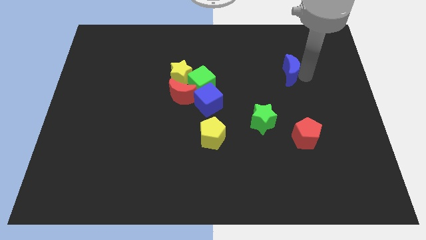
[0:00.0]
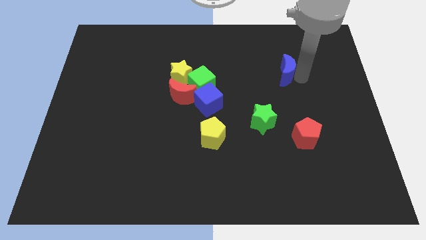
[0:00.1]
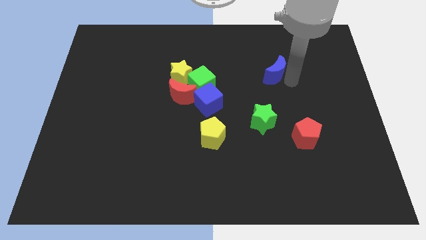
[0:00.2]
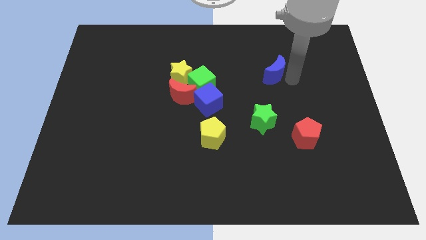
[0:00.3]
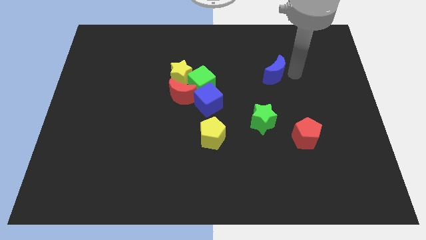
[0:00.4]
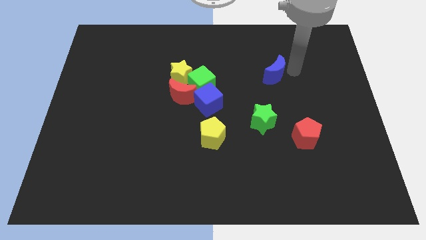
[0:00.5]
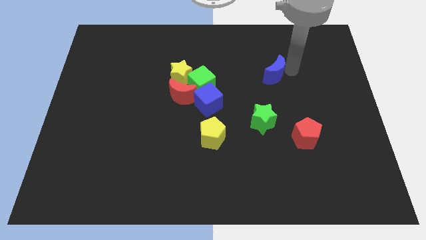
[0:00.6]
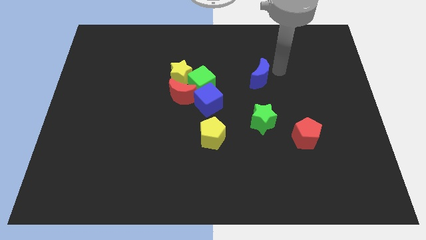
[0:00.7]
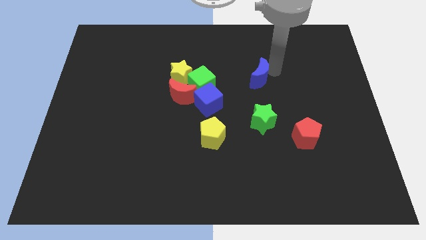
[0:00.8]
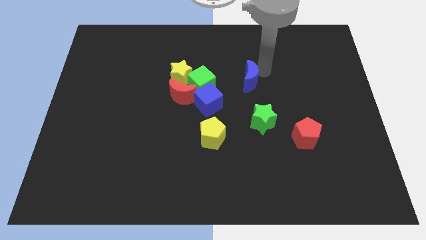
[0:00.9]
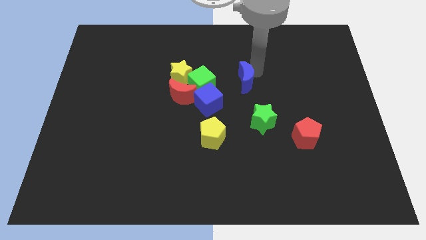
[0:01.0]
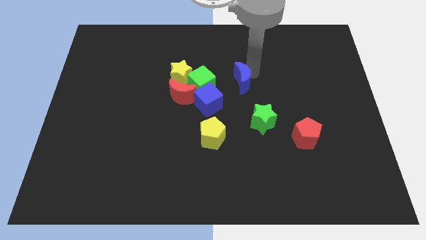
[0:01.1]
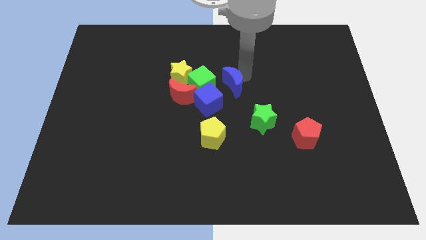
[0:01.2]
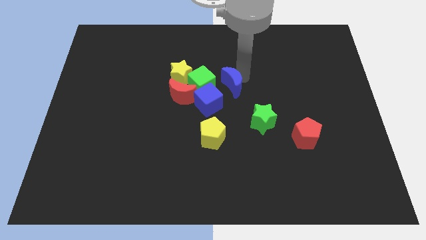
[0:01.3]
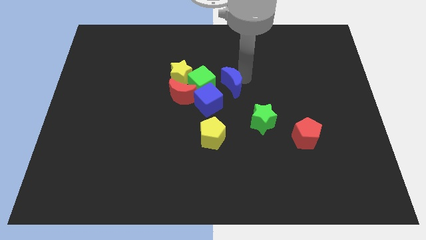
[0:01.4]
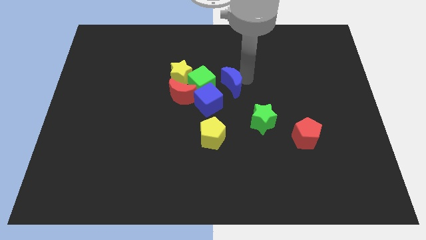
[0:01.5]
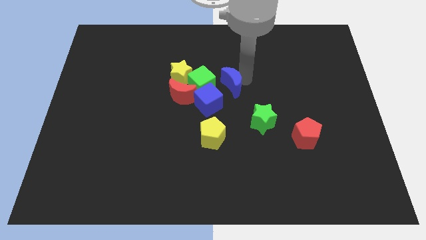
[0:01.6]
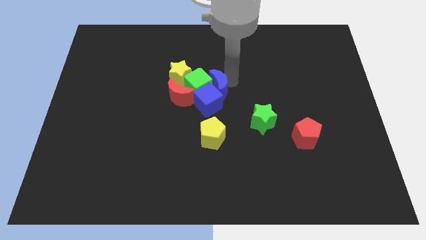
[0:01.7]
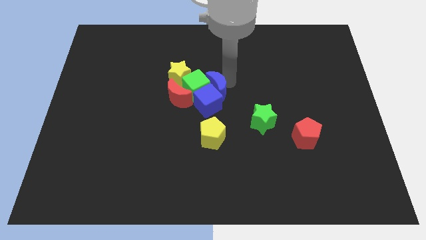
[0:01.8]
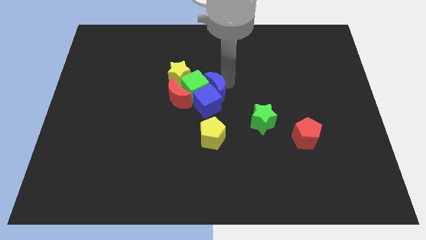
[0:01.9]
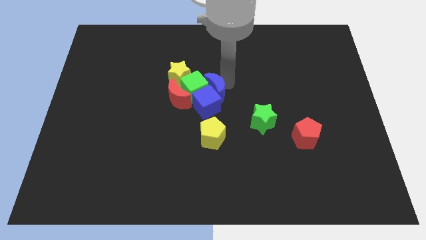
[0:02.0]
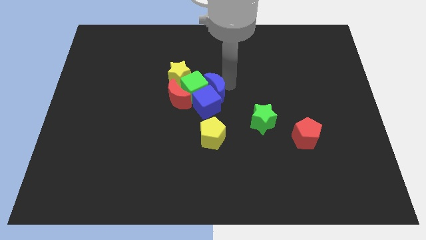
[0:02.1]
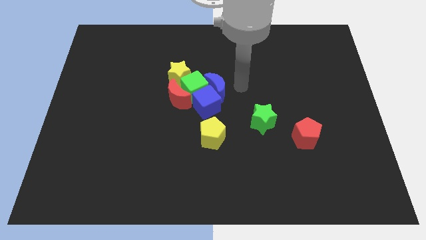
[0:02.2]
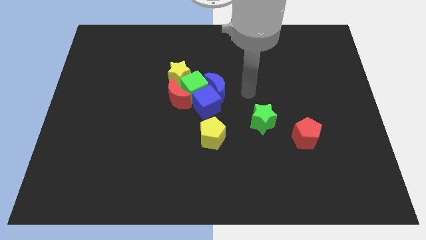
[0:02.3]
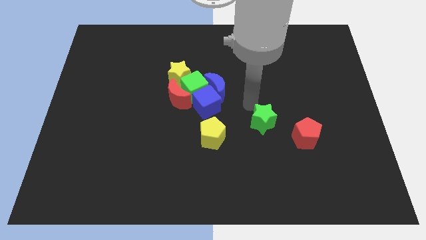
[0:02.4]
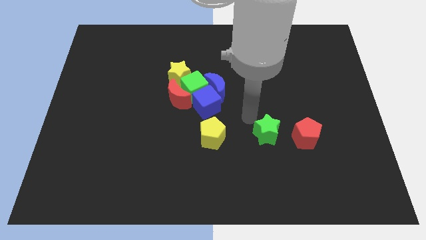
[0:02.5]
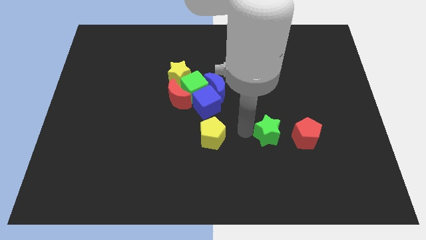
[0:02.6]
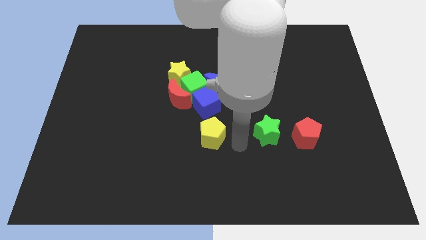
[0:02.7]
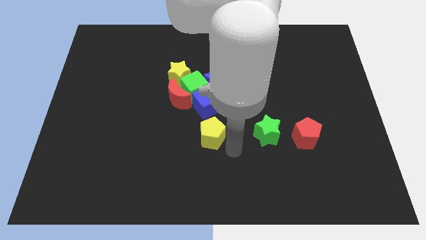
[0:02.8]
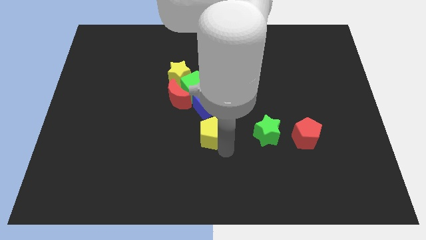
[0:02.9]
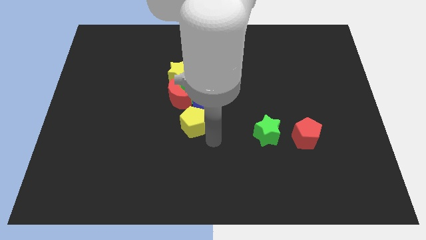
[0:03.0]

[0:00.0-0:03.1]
move the blue crescent and yellow pentagon to the group of blocks

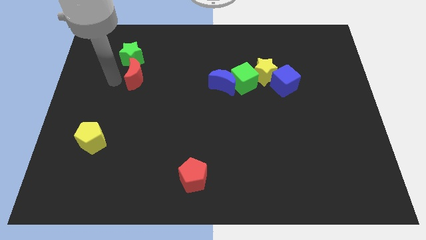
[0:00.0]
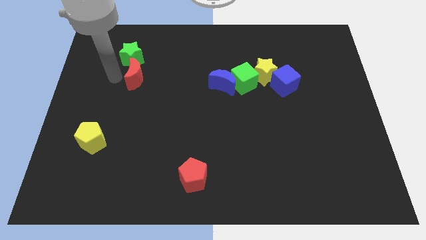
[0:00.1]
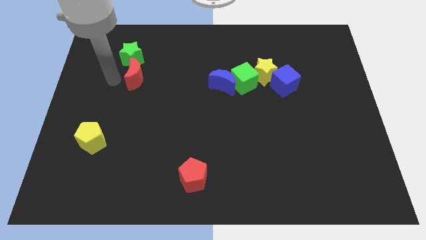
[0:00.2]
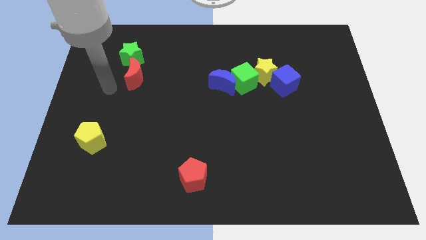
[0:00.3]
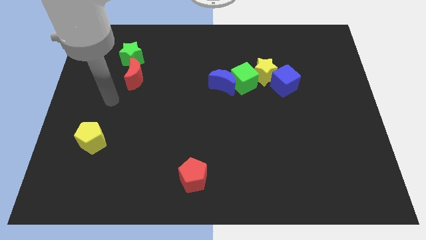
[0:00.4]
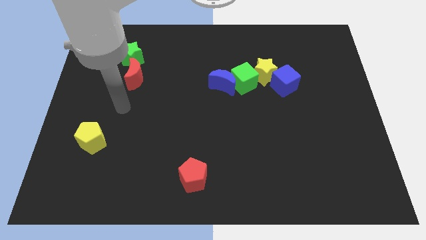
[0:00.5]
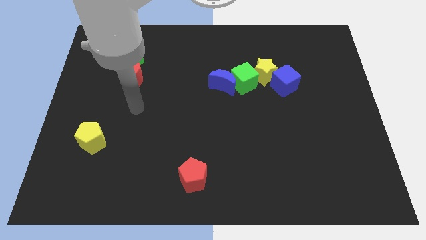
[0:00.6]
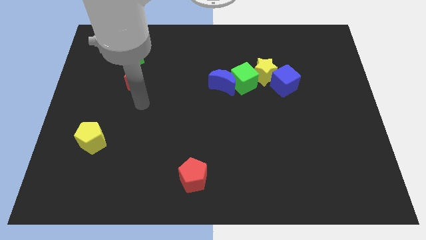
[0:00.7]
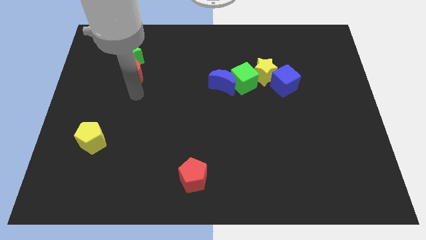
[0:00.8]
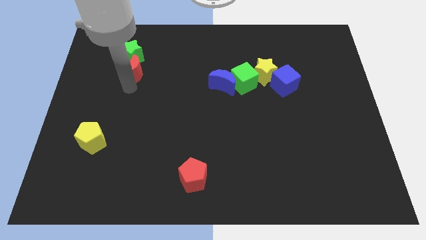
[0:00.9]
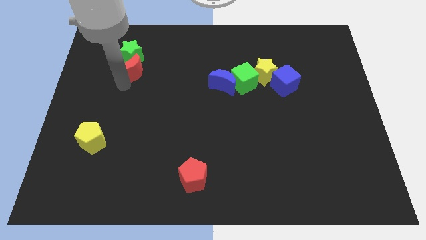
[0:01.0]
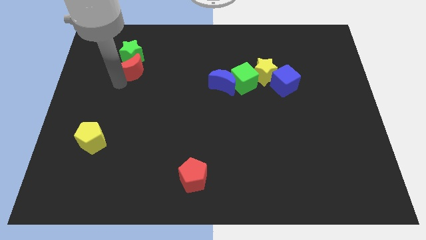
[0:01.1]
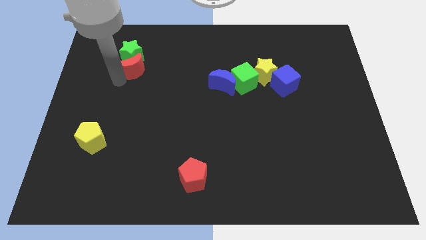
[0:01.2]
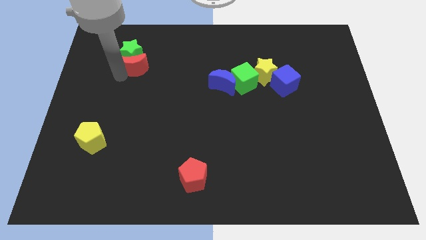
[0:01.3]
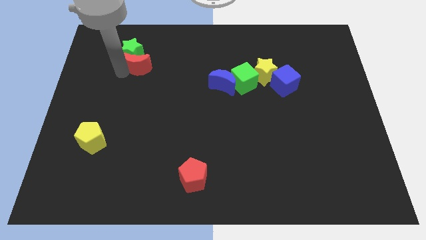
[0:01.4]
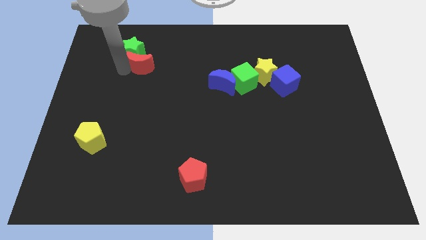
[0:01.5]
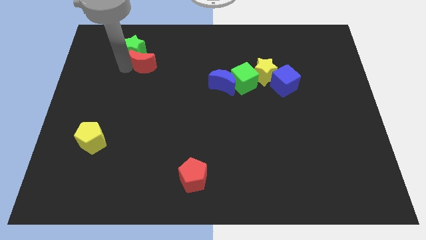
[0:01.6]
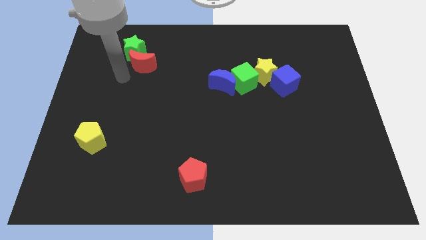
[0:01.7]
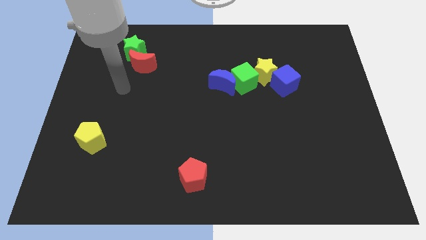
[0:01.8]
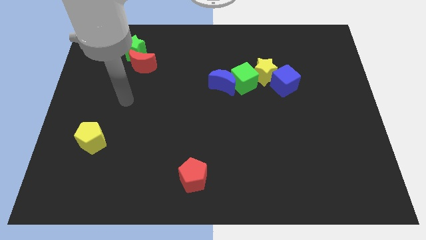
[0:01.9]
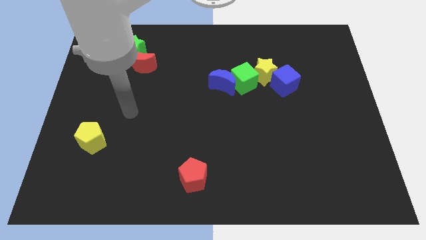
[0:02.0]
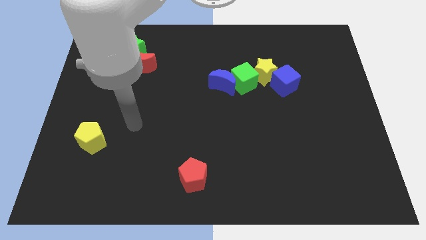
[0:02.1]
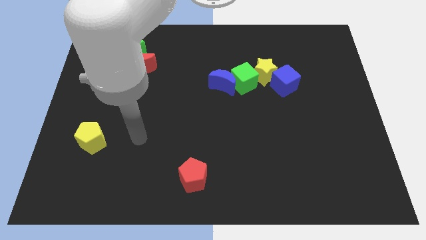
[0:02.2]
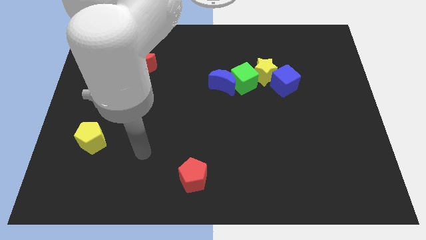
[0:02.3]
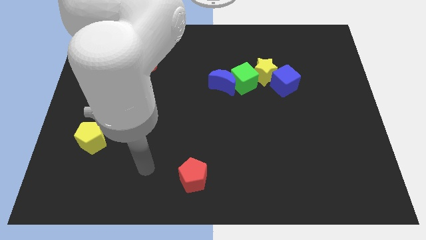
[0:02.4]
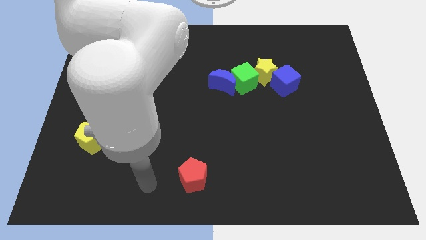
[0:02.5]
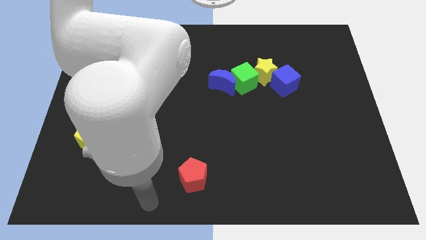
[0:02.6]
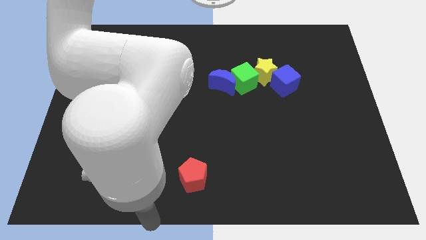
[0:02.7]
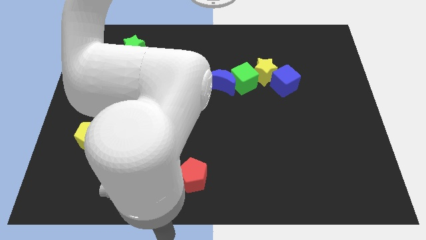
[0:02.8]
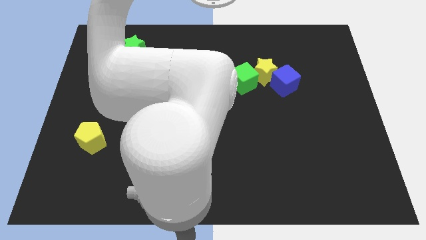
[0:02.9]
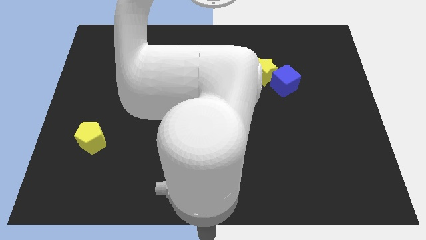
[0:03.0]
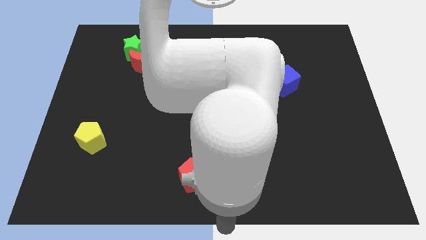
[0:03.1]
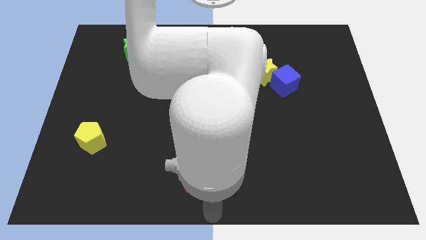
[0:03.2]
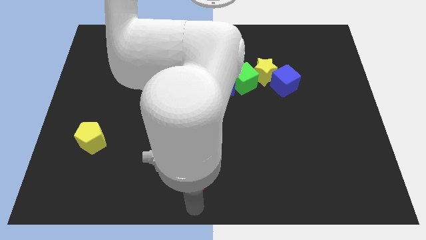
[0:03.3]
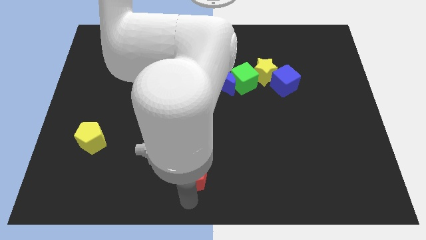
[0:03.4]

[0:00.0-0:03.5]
place the arm down to the red pentagon

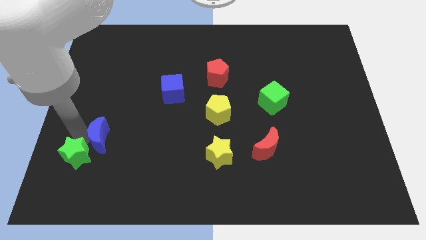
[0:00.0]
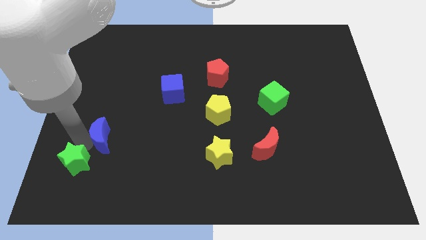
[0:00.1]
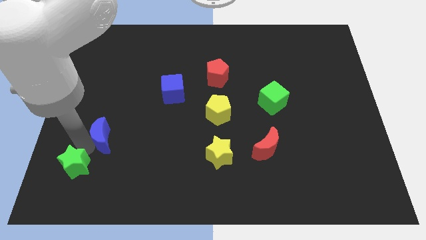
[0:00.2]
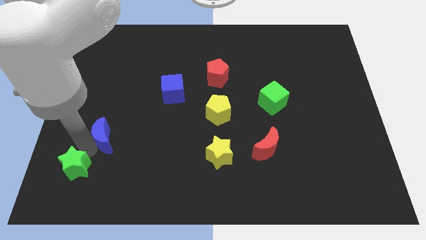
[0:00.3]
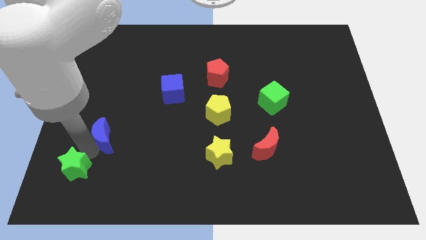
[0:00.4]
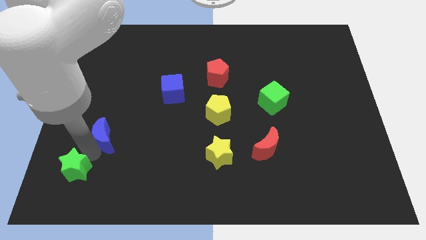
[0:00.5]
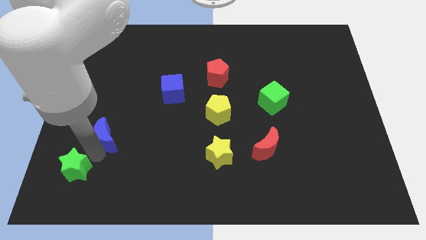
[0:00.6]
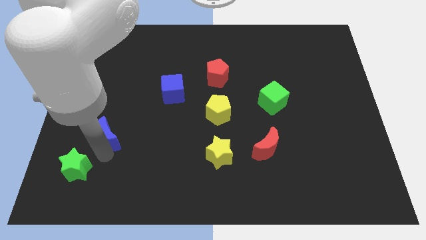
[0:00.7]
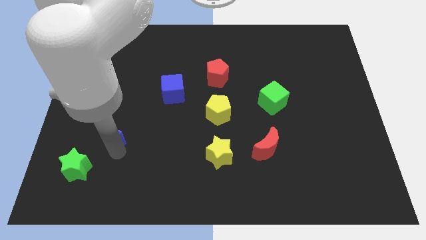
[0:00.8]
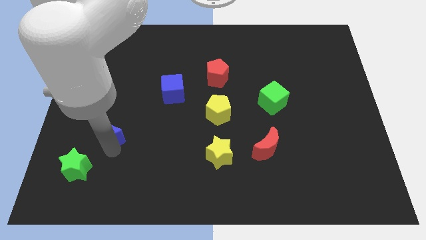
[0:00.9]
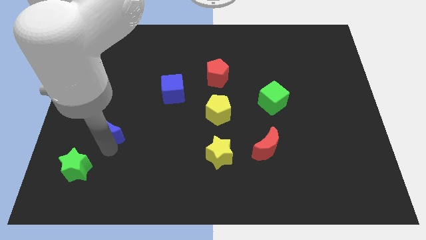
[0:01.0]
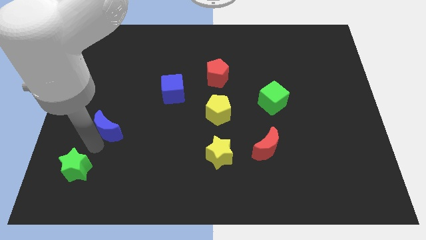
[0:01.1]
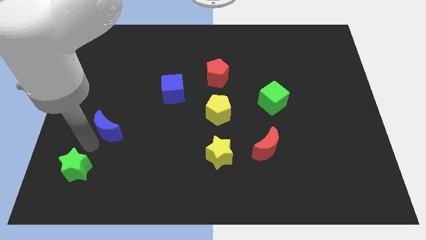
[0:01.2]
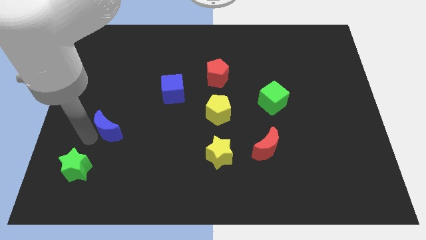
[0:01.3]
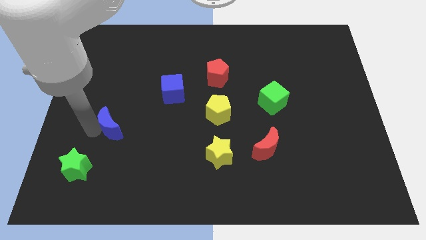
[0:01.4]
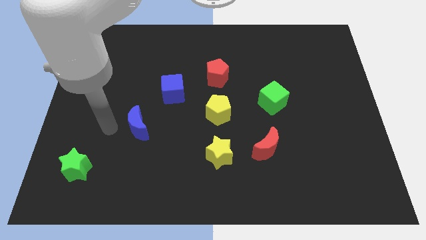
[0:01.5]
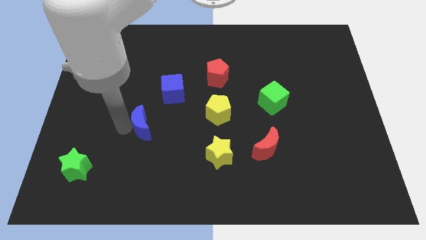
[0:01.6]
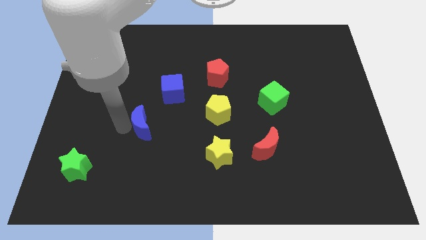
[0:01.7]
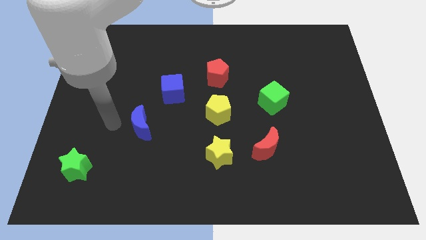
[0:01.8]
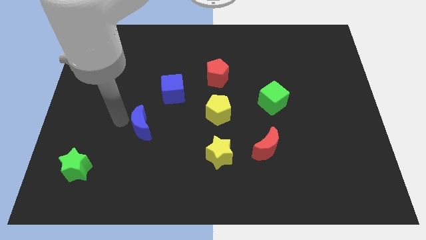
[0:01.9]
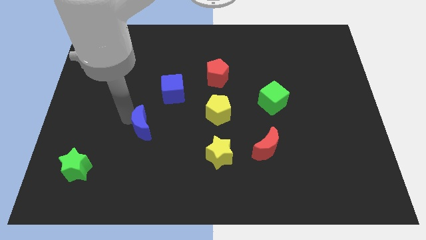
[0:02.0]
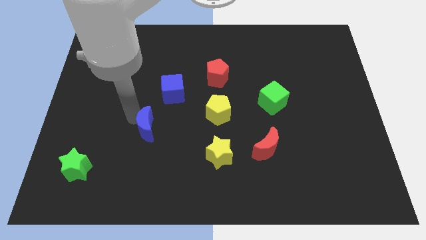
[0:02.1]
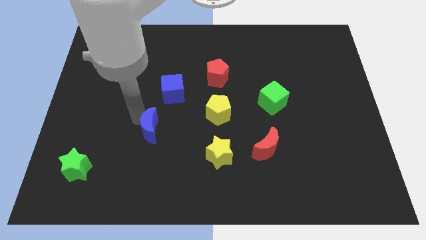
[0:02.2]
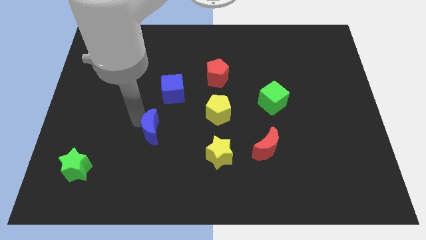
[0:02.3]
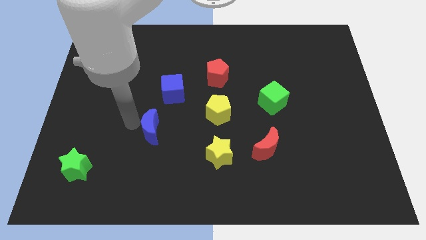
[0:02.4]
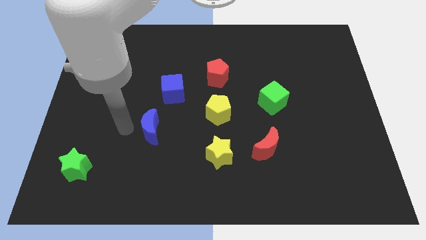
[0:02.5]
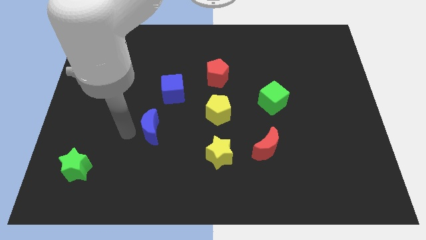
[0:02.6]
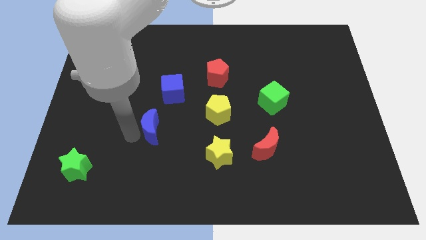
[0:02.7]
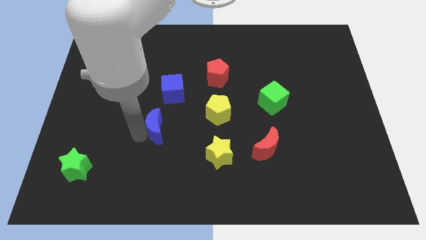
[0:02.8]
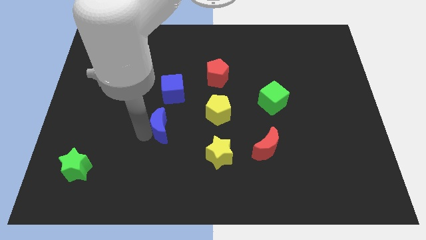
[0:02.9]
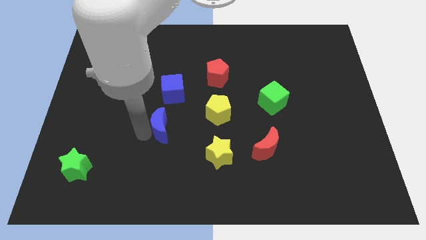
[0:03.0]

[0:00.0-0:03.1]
separate blue moon from green star
